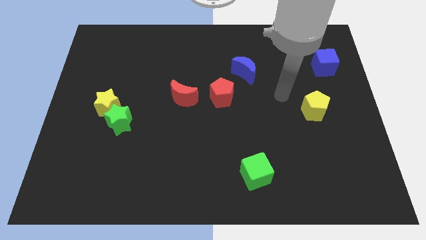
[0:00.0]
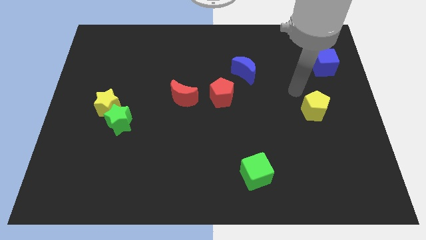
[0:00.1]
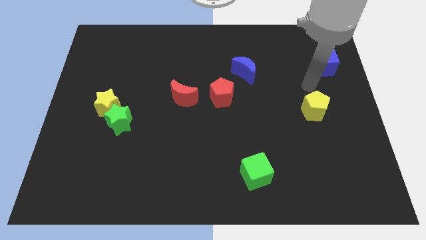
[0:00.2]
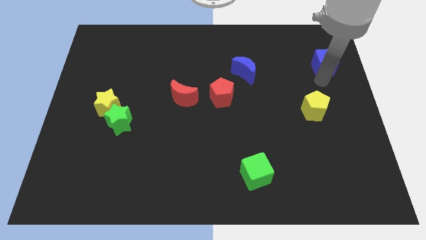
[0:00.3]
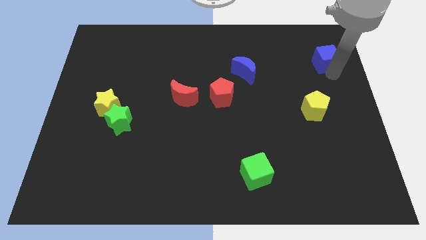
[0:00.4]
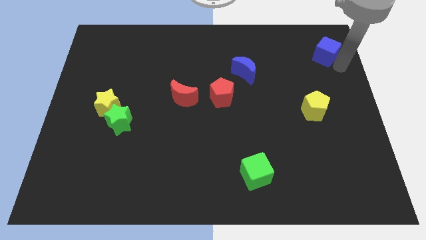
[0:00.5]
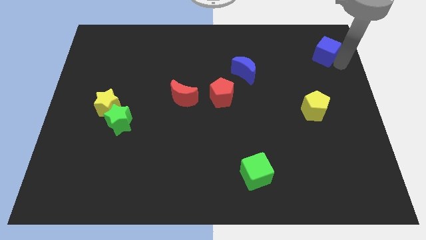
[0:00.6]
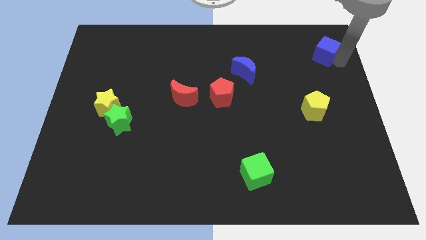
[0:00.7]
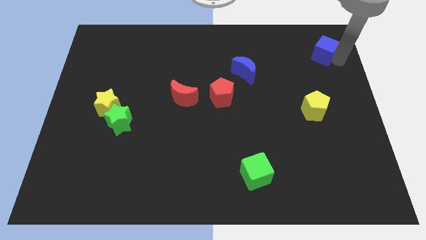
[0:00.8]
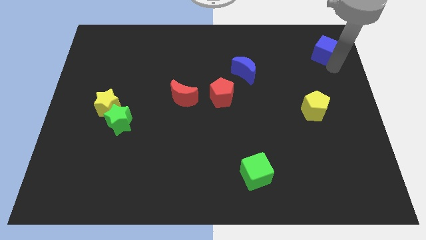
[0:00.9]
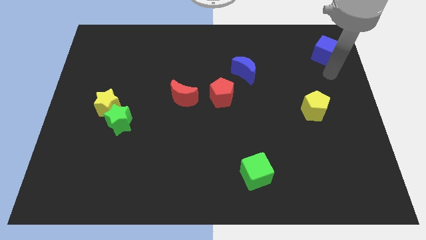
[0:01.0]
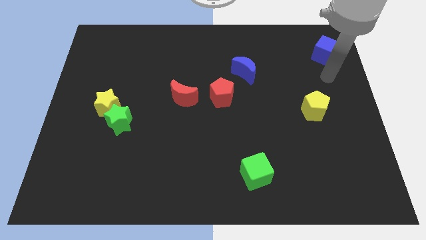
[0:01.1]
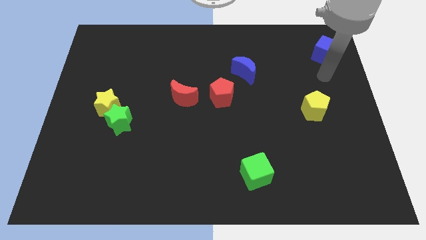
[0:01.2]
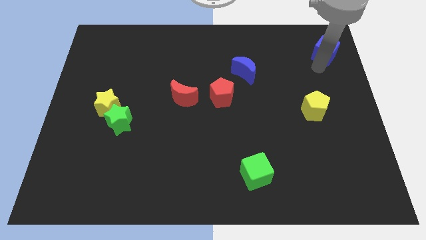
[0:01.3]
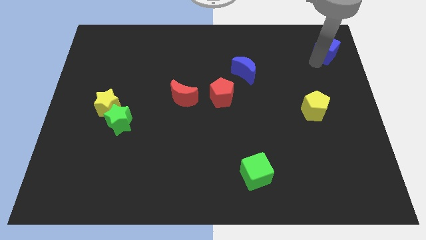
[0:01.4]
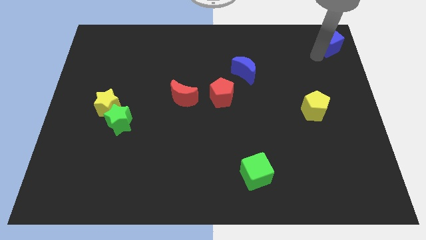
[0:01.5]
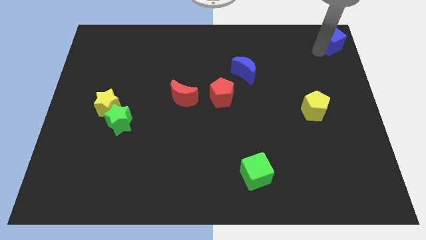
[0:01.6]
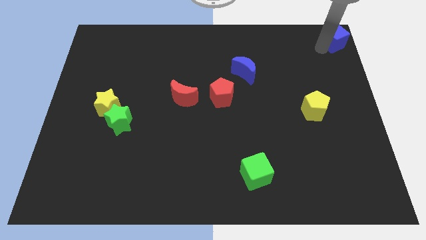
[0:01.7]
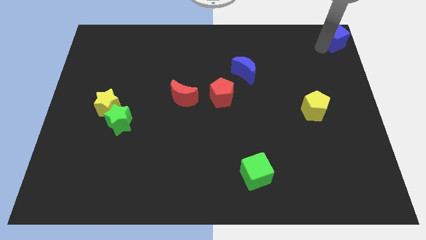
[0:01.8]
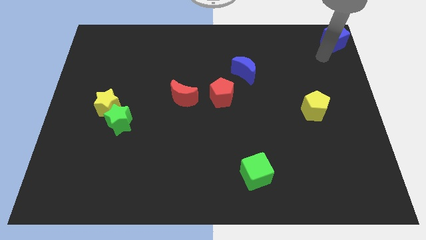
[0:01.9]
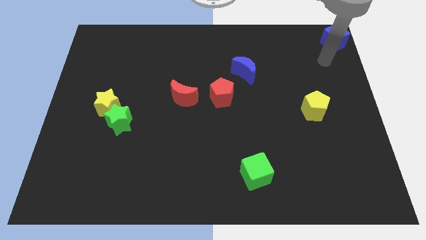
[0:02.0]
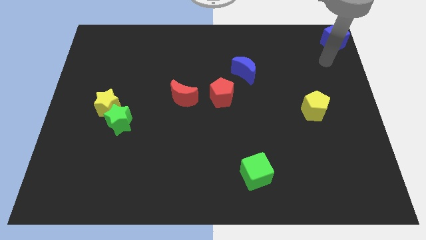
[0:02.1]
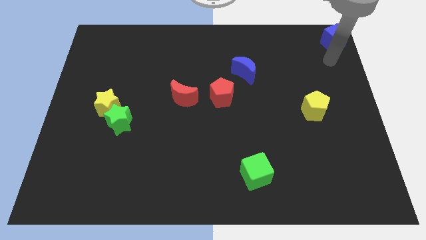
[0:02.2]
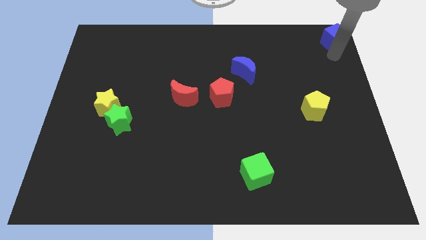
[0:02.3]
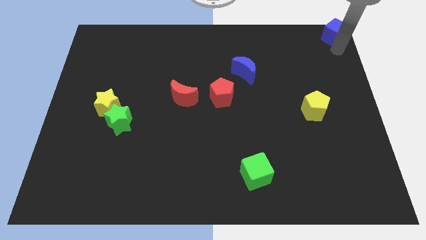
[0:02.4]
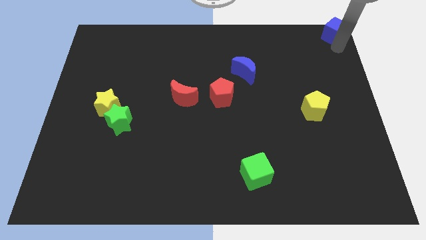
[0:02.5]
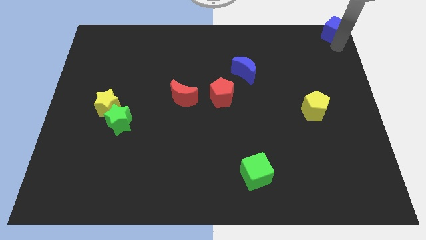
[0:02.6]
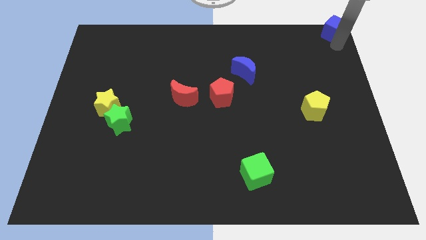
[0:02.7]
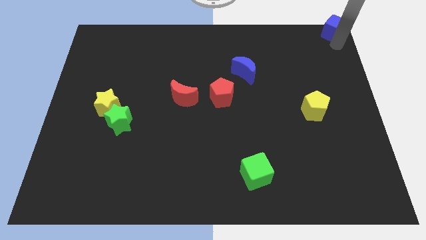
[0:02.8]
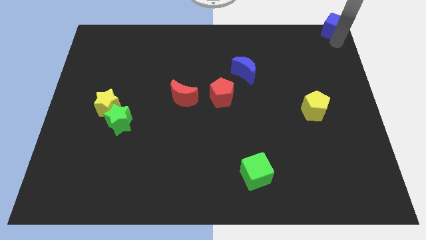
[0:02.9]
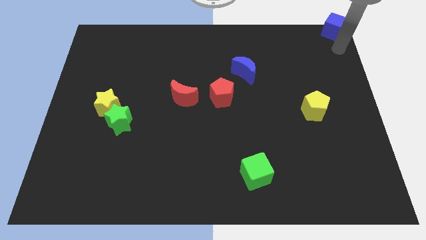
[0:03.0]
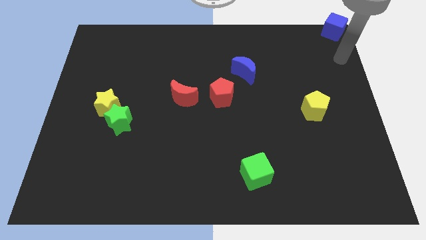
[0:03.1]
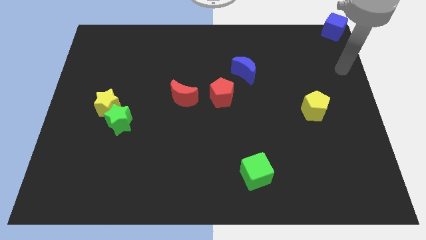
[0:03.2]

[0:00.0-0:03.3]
place the blue cube at the top right corner of the board

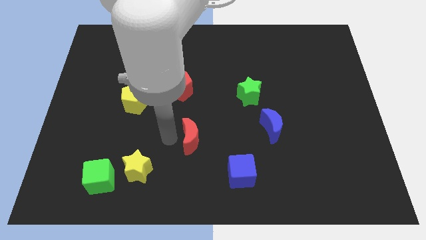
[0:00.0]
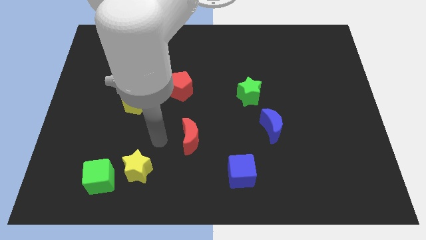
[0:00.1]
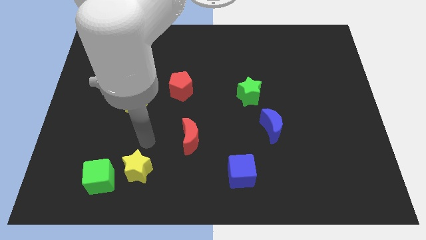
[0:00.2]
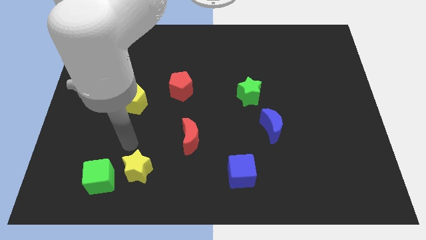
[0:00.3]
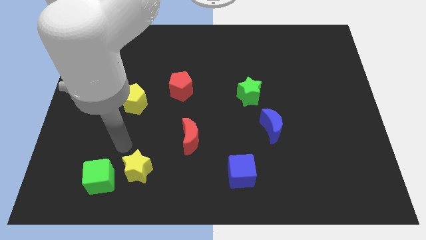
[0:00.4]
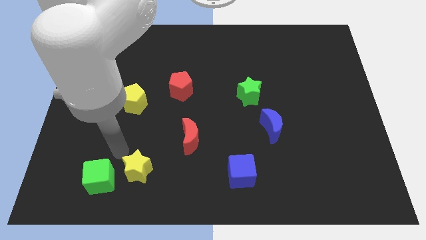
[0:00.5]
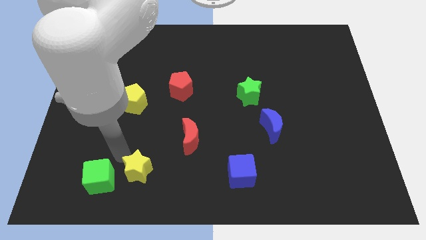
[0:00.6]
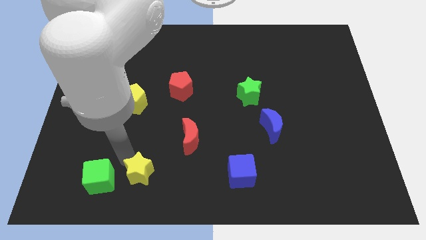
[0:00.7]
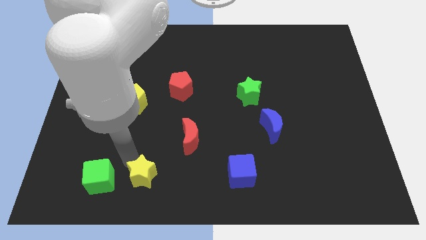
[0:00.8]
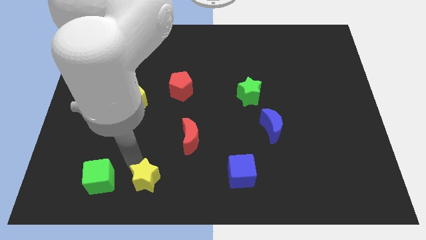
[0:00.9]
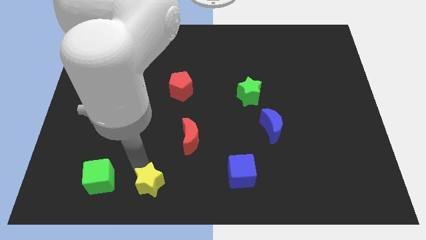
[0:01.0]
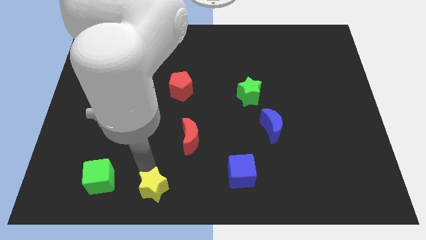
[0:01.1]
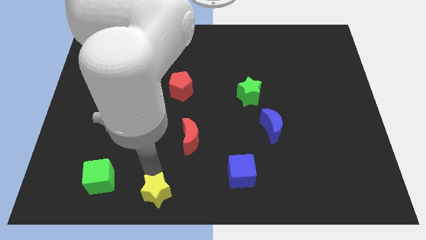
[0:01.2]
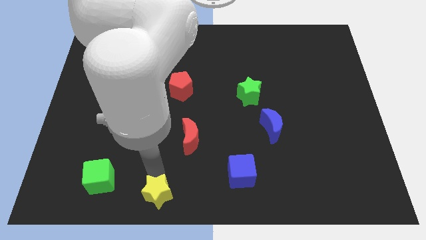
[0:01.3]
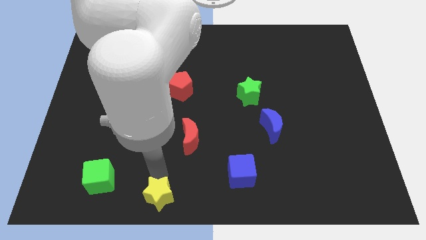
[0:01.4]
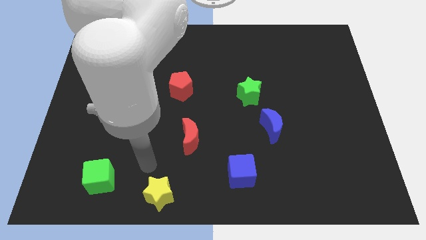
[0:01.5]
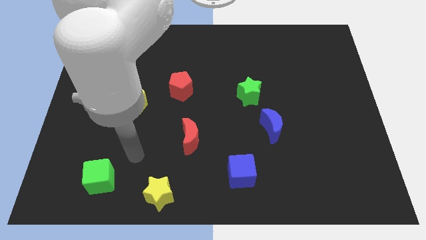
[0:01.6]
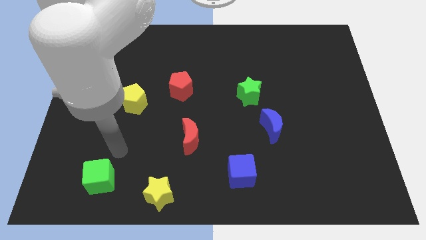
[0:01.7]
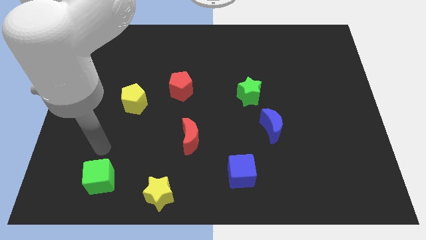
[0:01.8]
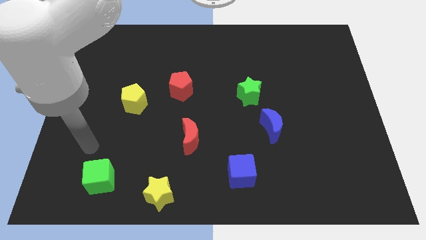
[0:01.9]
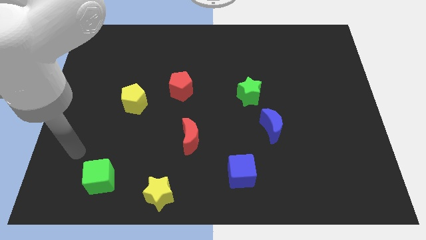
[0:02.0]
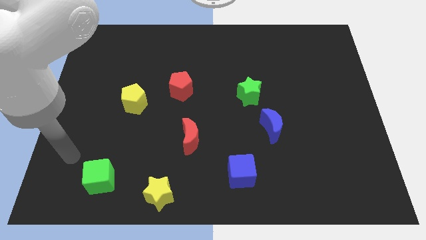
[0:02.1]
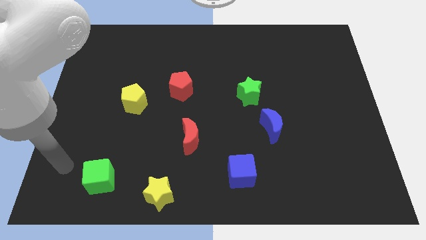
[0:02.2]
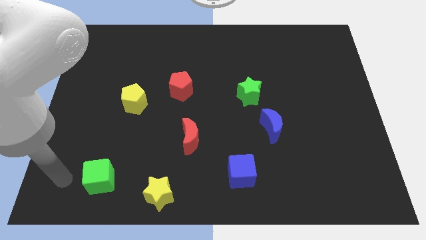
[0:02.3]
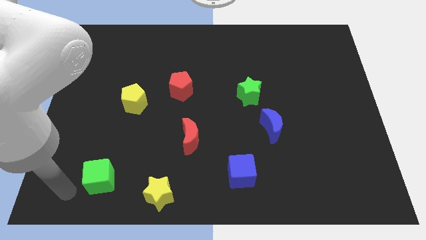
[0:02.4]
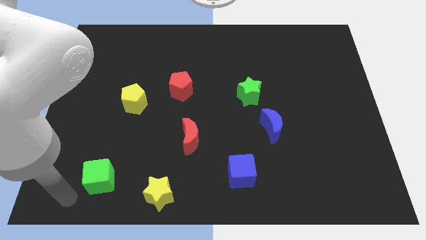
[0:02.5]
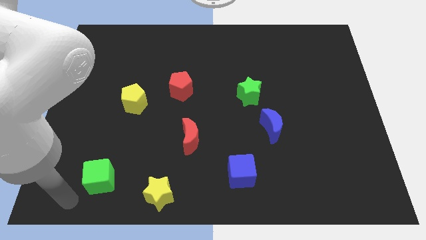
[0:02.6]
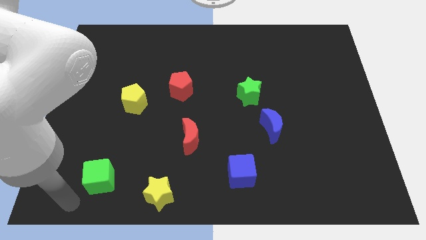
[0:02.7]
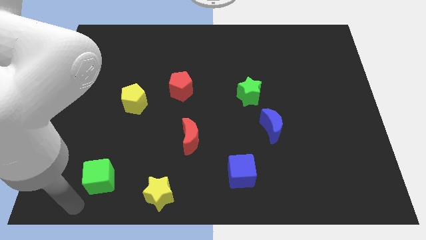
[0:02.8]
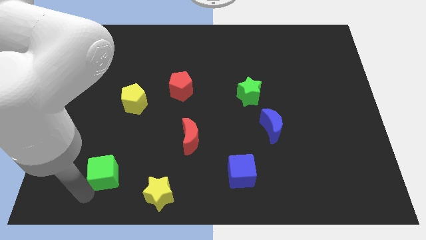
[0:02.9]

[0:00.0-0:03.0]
push the yellow star slightly towards the bottom center of the board

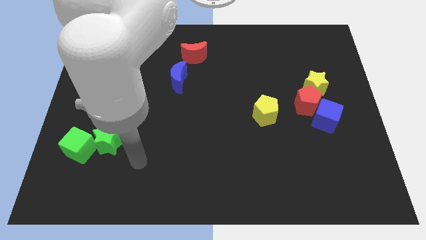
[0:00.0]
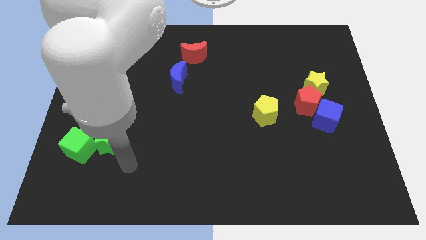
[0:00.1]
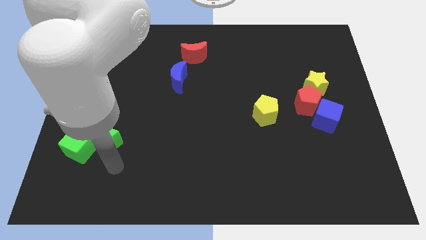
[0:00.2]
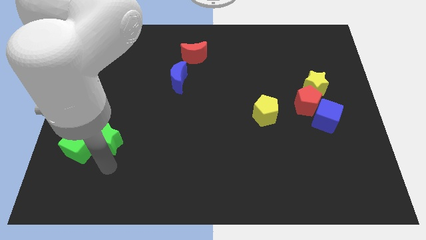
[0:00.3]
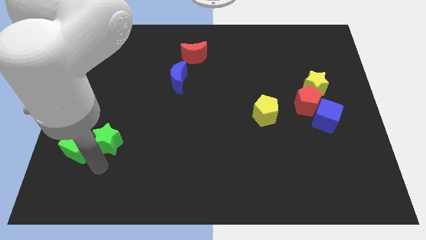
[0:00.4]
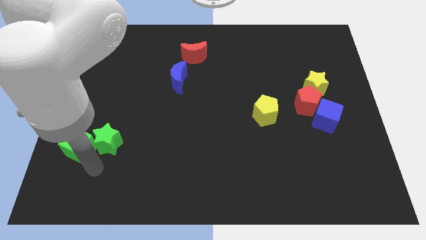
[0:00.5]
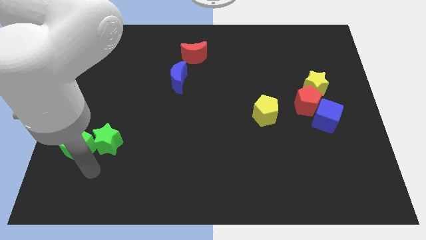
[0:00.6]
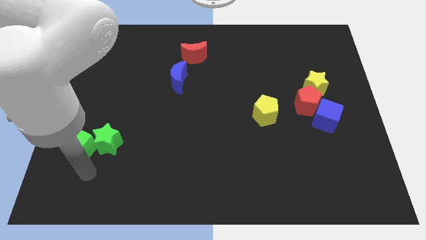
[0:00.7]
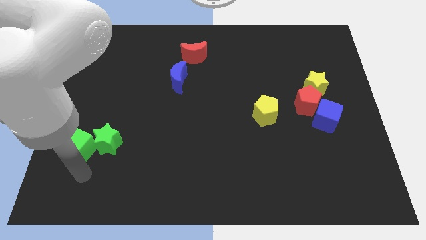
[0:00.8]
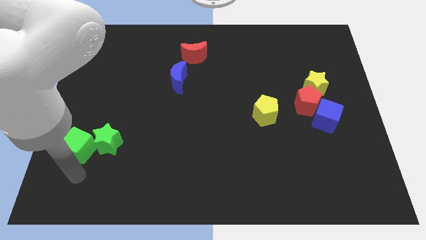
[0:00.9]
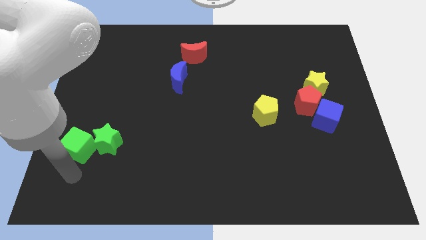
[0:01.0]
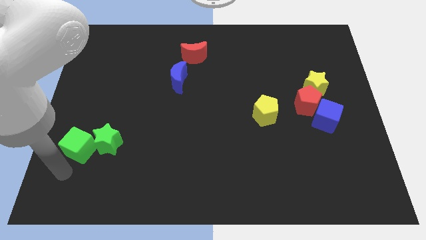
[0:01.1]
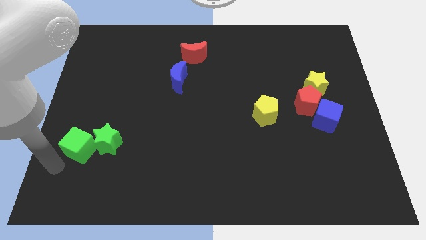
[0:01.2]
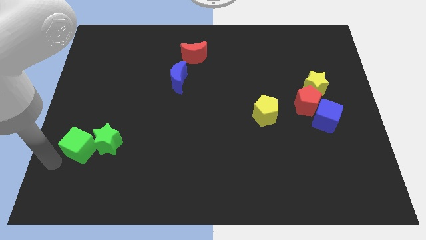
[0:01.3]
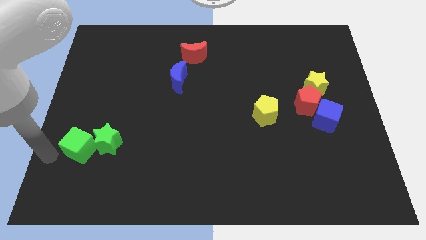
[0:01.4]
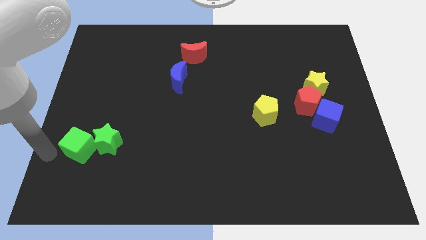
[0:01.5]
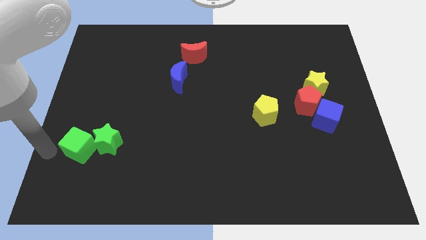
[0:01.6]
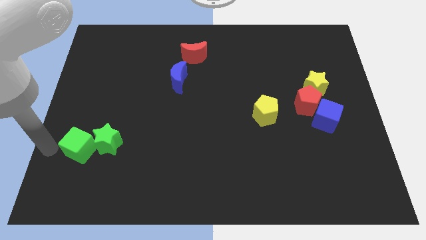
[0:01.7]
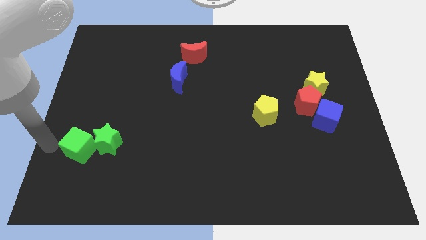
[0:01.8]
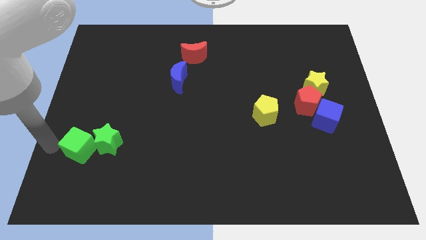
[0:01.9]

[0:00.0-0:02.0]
move the arm towards the green cube

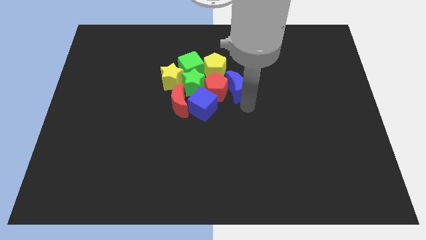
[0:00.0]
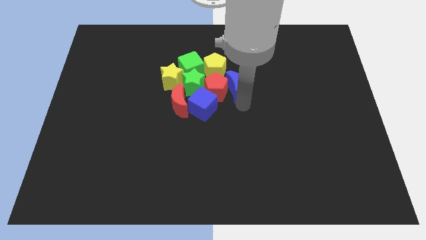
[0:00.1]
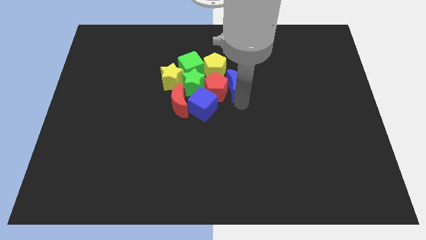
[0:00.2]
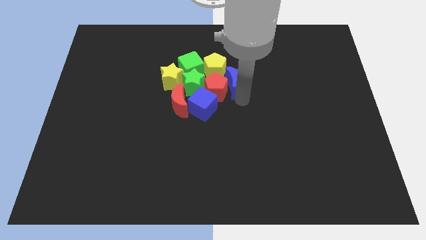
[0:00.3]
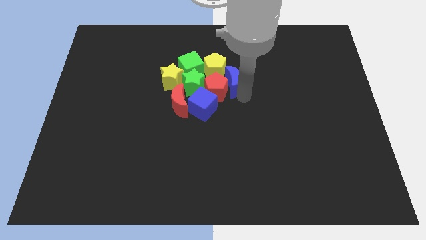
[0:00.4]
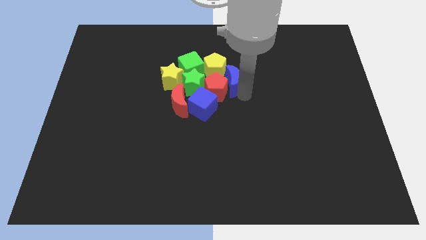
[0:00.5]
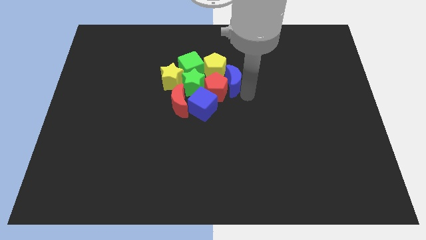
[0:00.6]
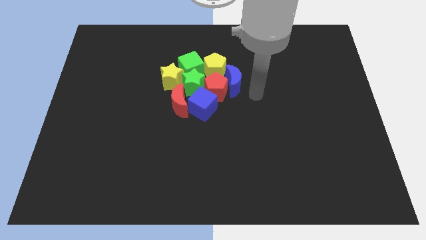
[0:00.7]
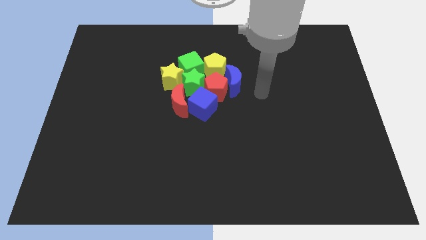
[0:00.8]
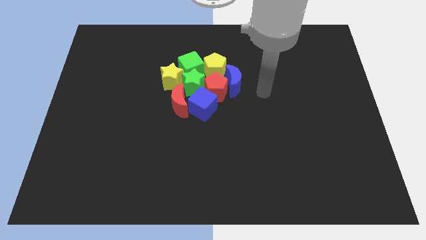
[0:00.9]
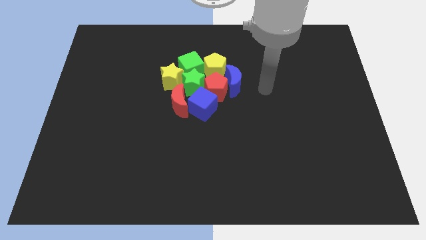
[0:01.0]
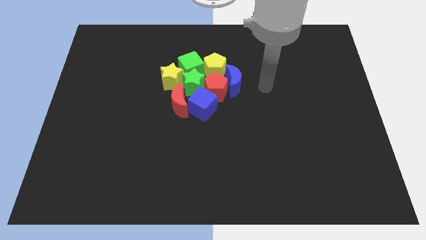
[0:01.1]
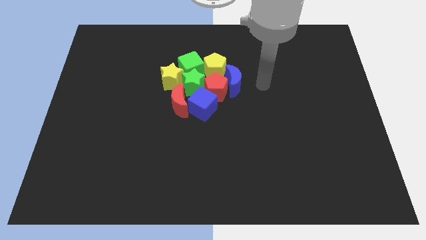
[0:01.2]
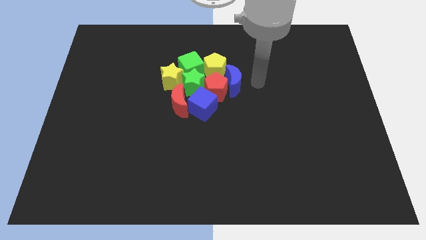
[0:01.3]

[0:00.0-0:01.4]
slide the blue moon to the right of the red pentagon
